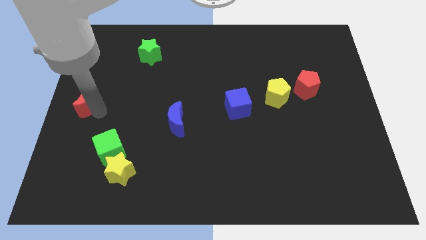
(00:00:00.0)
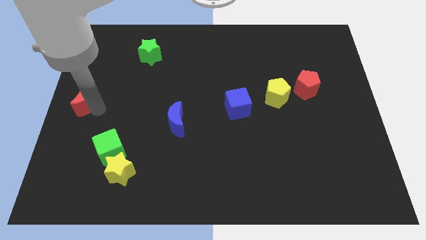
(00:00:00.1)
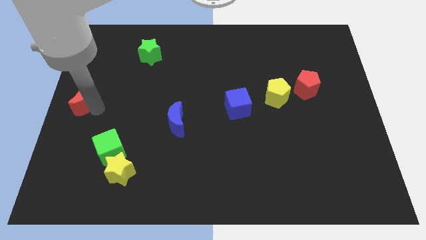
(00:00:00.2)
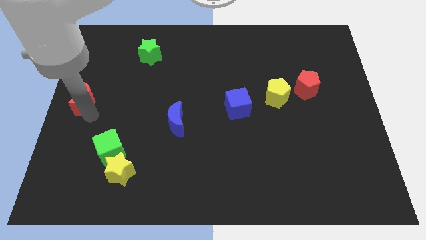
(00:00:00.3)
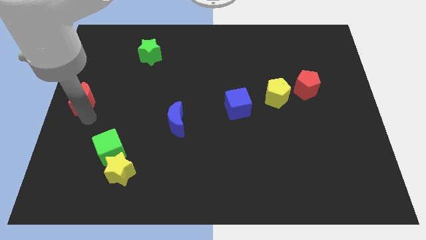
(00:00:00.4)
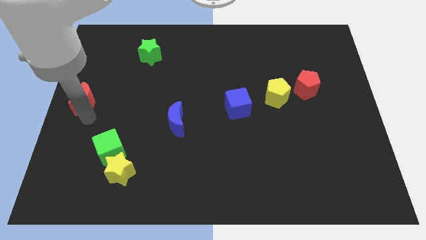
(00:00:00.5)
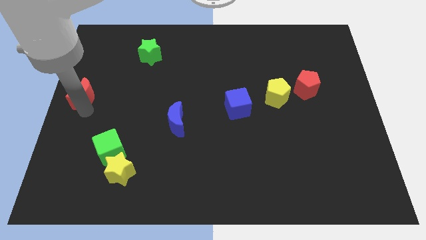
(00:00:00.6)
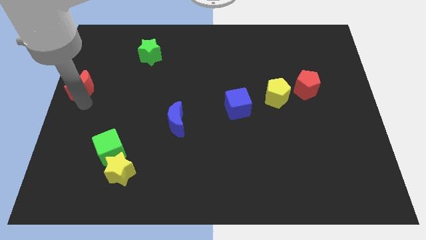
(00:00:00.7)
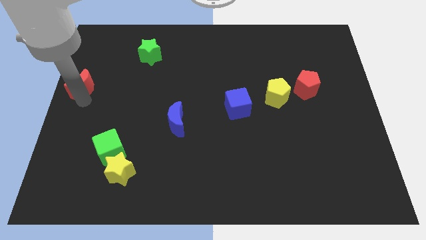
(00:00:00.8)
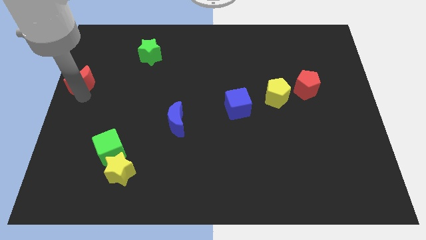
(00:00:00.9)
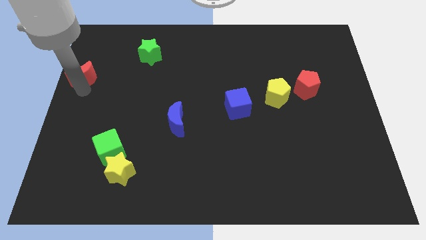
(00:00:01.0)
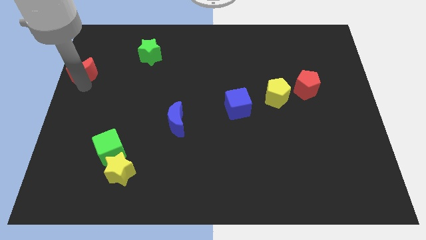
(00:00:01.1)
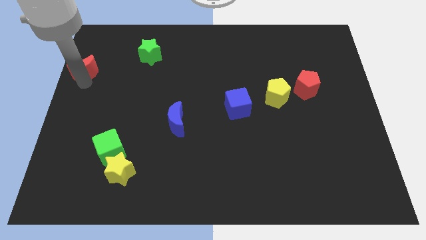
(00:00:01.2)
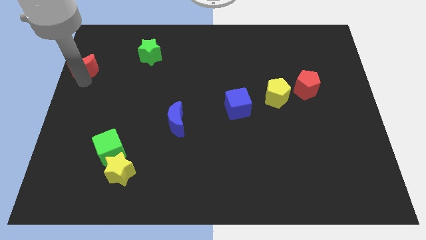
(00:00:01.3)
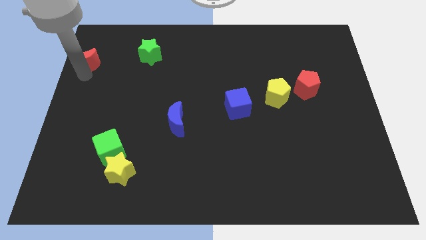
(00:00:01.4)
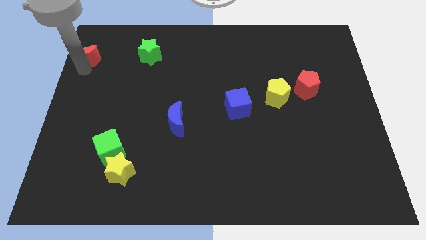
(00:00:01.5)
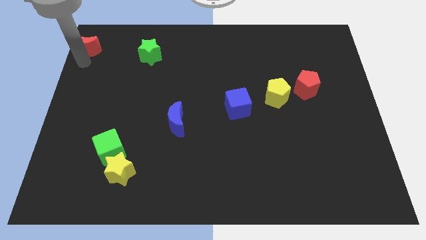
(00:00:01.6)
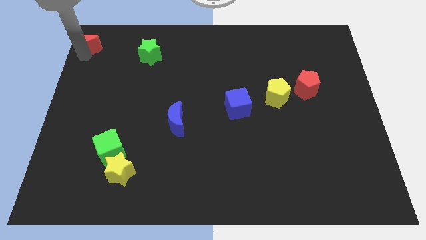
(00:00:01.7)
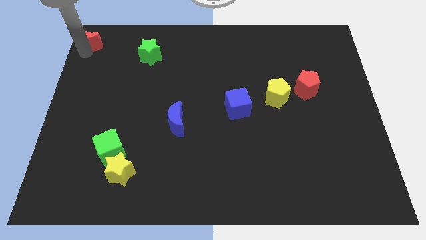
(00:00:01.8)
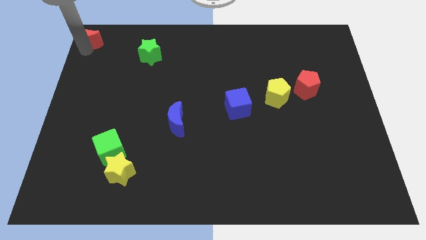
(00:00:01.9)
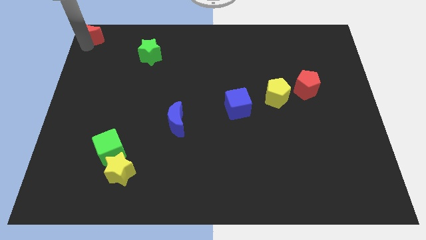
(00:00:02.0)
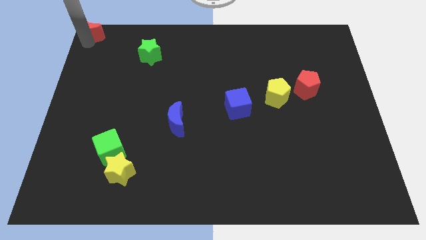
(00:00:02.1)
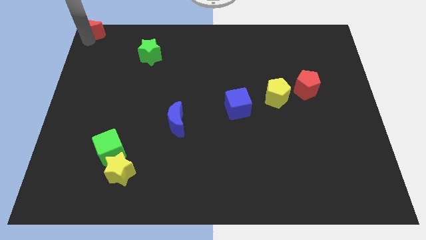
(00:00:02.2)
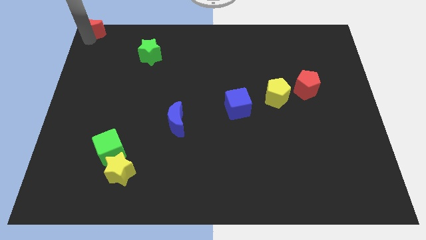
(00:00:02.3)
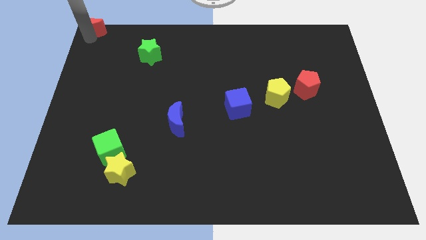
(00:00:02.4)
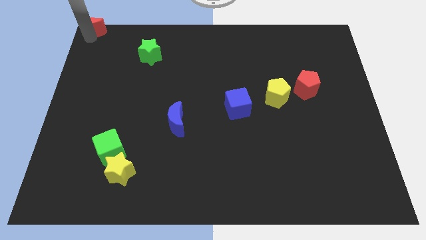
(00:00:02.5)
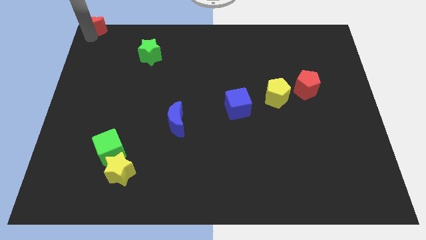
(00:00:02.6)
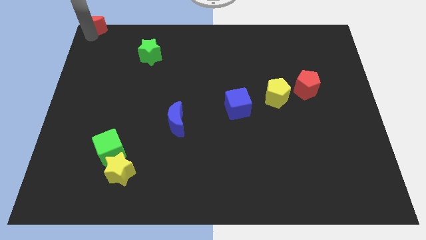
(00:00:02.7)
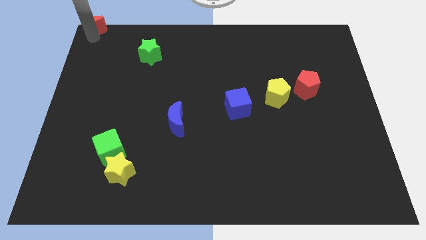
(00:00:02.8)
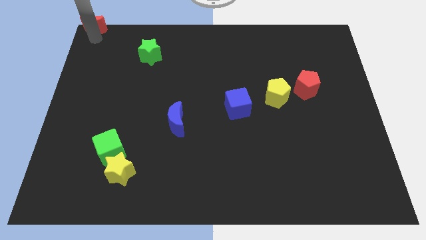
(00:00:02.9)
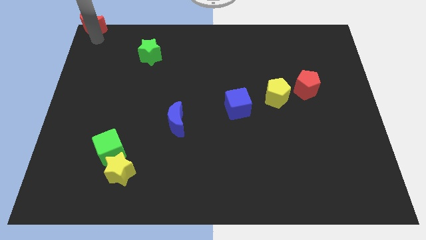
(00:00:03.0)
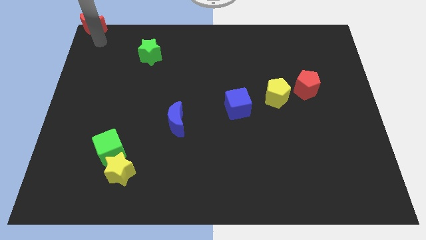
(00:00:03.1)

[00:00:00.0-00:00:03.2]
push red crescent towards top left corner

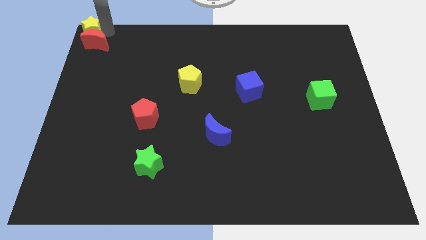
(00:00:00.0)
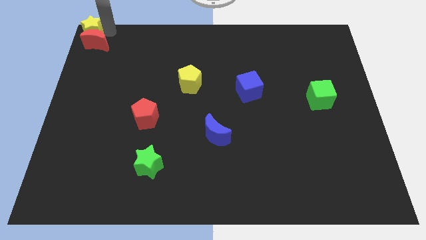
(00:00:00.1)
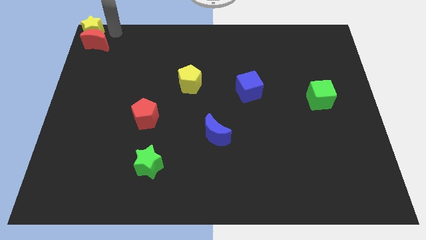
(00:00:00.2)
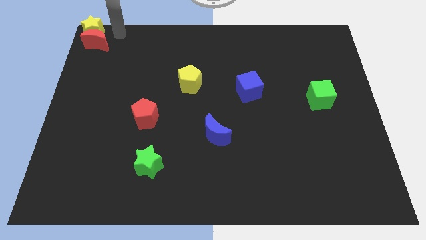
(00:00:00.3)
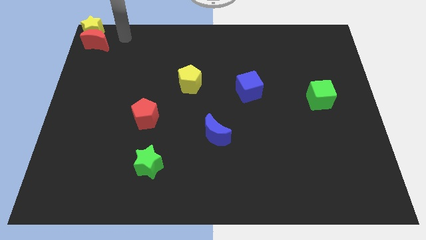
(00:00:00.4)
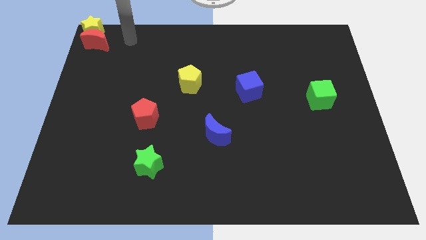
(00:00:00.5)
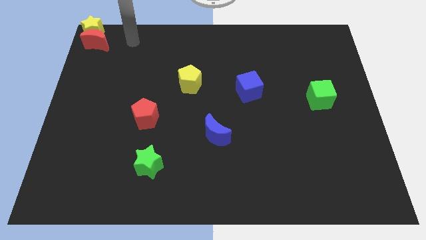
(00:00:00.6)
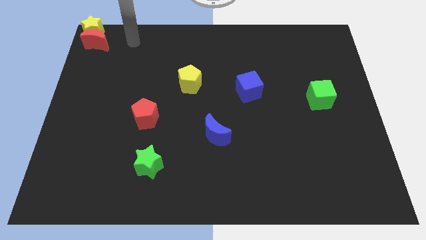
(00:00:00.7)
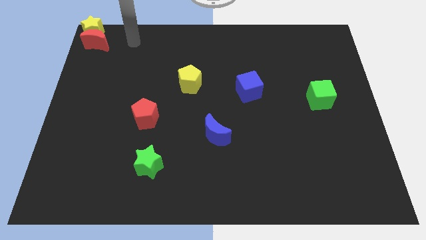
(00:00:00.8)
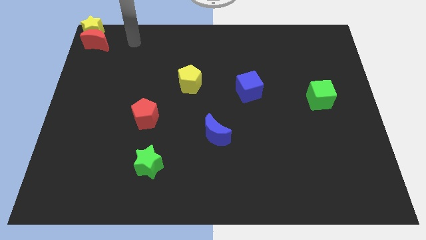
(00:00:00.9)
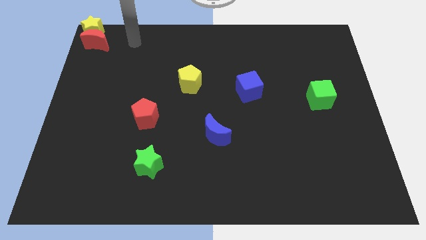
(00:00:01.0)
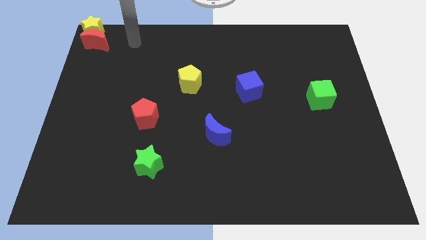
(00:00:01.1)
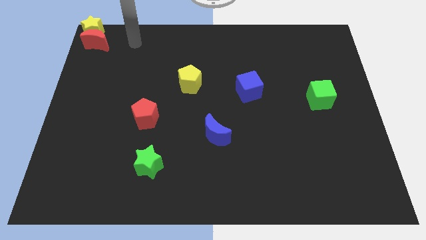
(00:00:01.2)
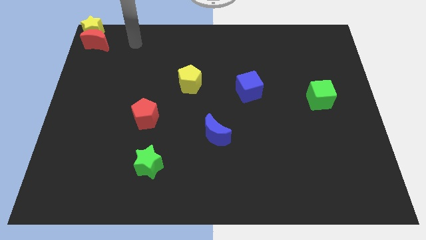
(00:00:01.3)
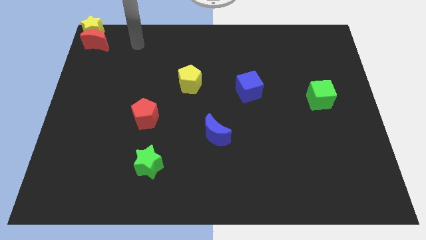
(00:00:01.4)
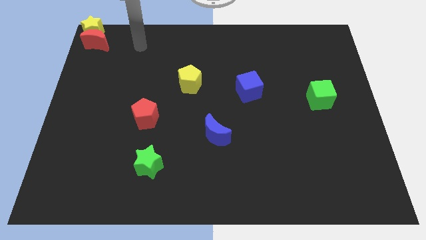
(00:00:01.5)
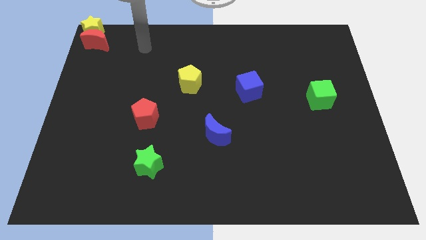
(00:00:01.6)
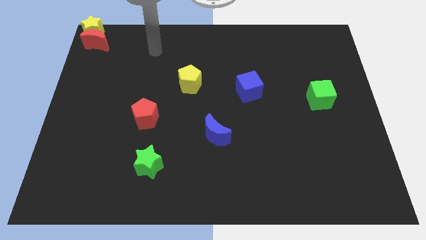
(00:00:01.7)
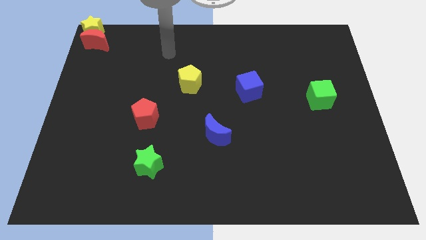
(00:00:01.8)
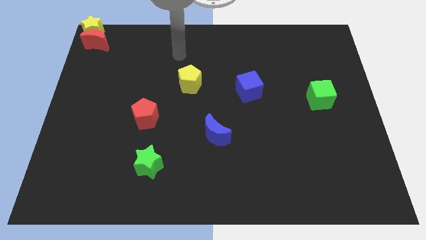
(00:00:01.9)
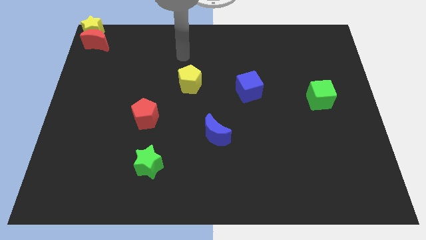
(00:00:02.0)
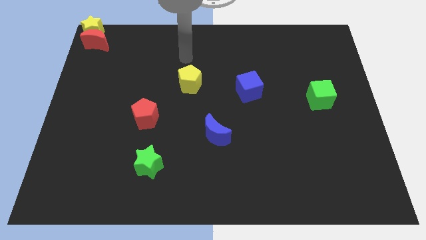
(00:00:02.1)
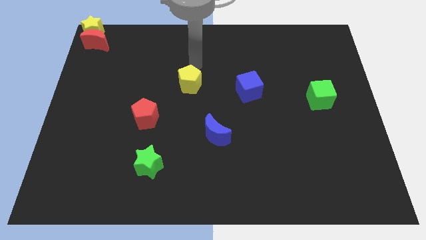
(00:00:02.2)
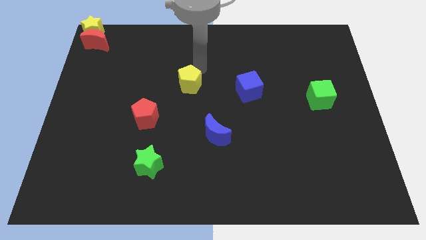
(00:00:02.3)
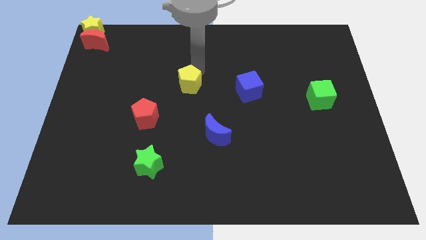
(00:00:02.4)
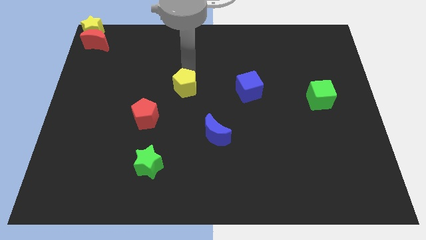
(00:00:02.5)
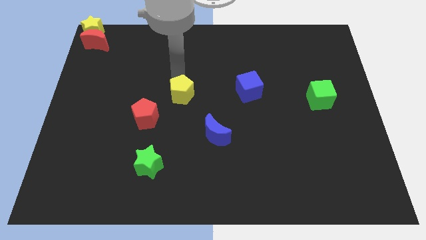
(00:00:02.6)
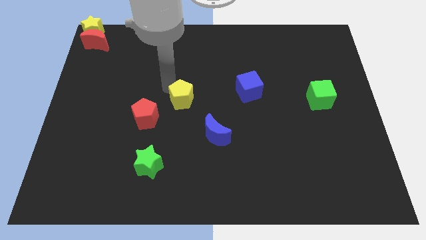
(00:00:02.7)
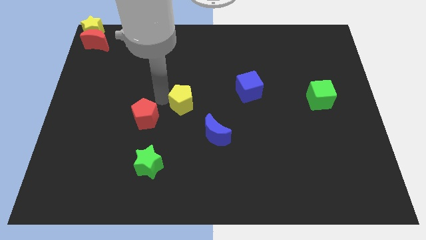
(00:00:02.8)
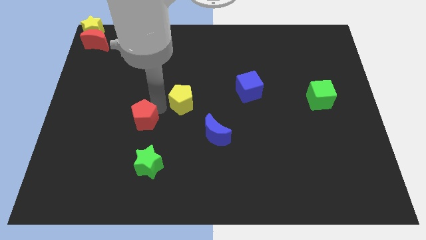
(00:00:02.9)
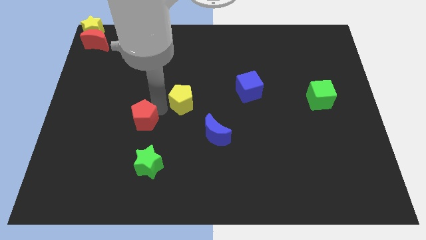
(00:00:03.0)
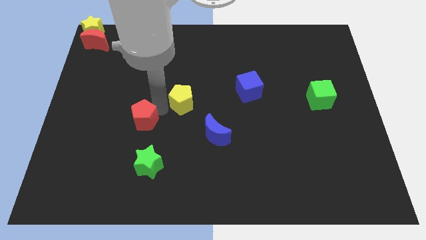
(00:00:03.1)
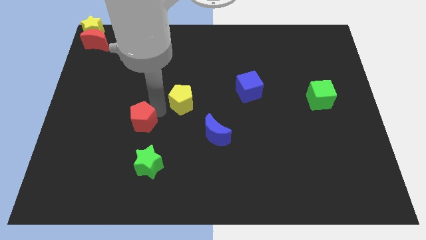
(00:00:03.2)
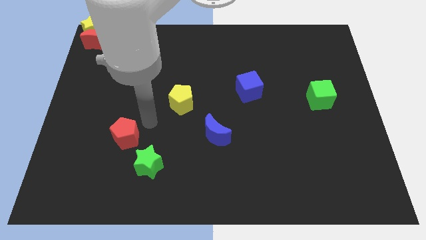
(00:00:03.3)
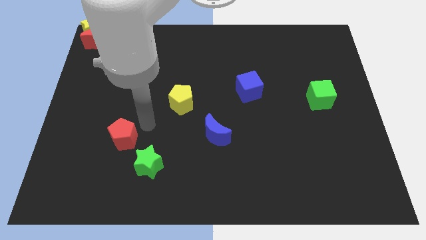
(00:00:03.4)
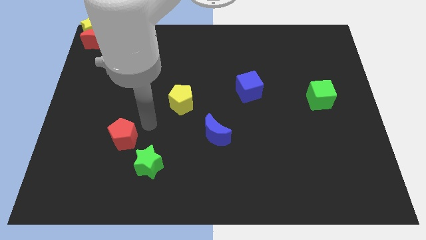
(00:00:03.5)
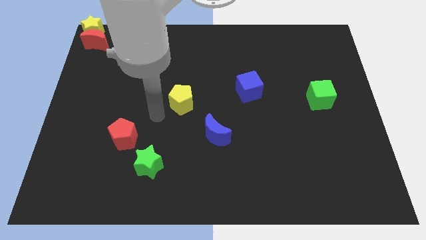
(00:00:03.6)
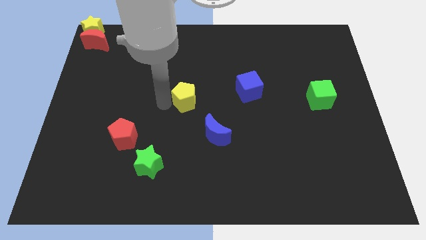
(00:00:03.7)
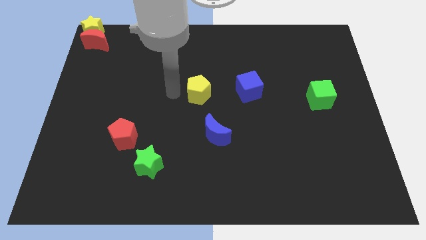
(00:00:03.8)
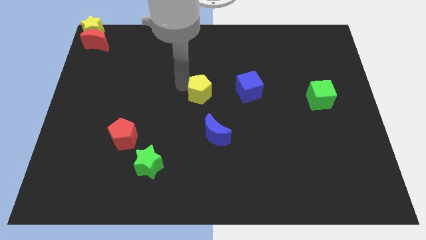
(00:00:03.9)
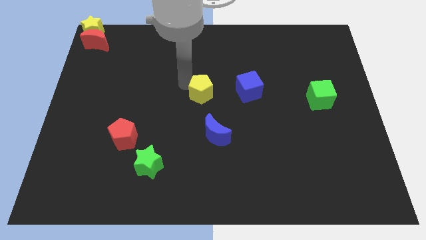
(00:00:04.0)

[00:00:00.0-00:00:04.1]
place the yellow pentagon parallel to blue cube

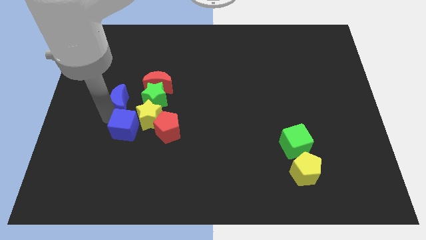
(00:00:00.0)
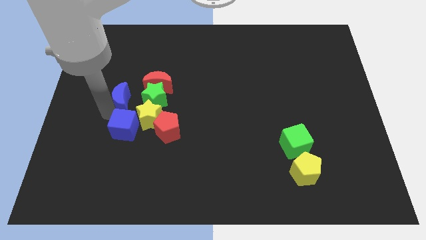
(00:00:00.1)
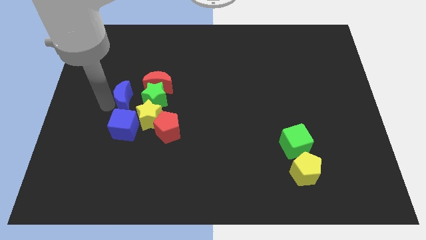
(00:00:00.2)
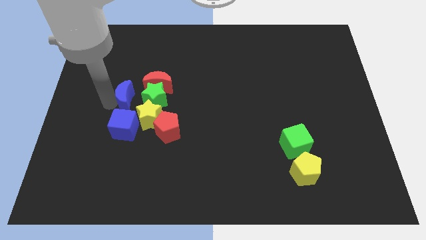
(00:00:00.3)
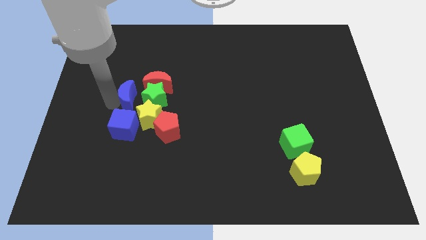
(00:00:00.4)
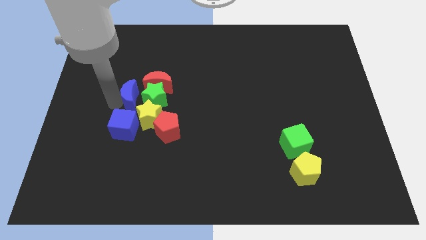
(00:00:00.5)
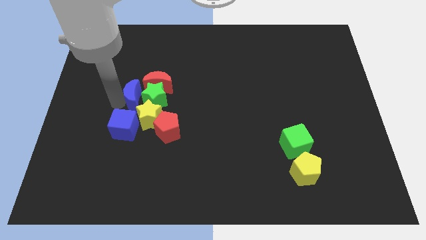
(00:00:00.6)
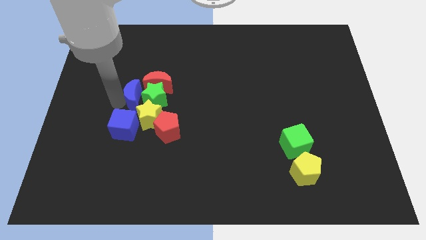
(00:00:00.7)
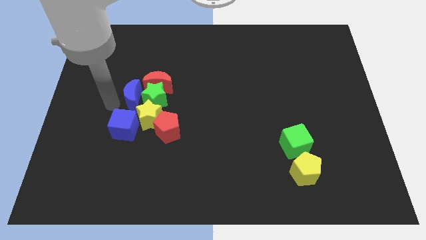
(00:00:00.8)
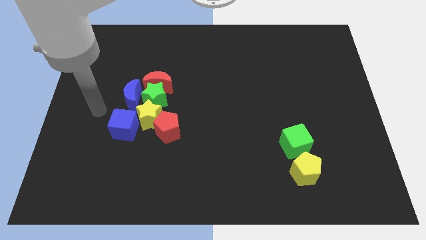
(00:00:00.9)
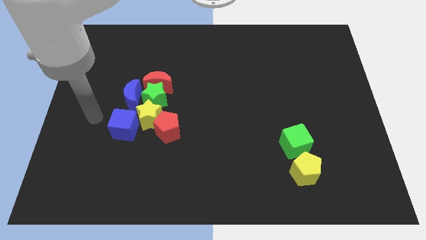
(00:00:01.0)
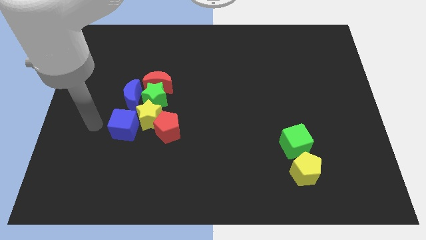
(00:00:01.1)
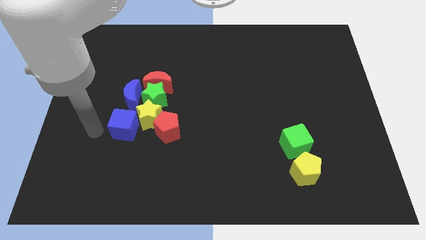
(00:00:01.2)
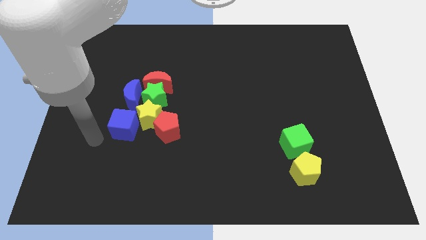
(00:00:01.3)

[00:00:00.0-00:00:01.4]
slide the blue moon left to the green star
